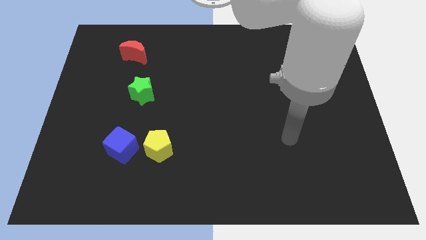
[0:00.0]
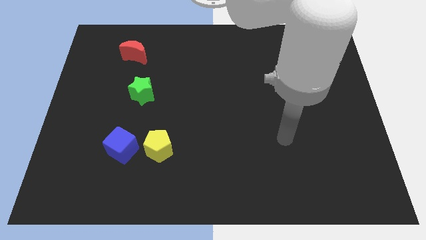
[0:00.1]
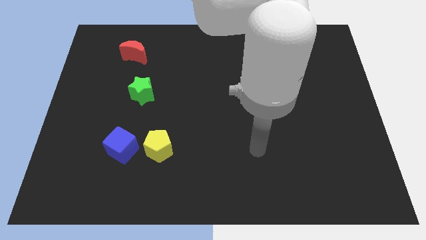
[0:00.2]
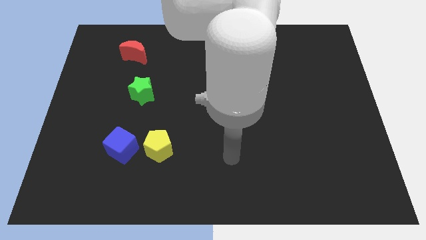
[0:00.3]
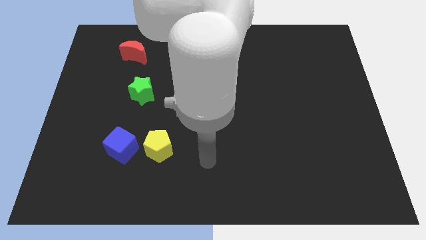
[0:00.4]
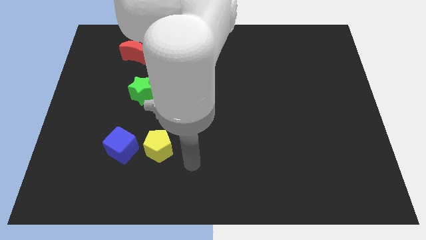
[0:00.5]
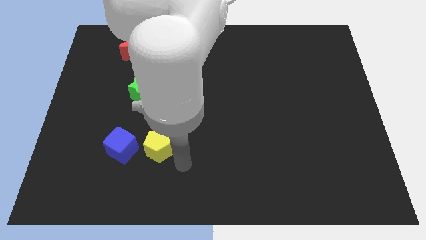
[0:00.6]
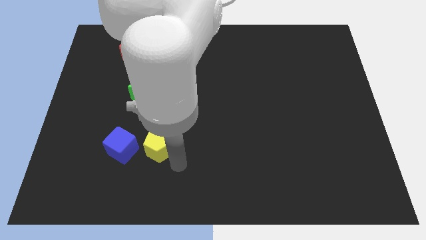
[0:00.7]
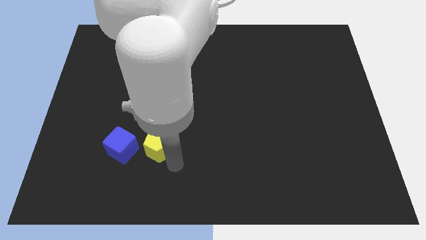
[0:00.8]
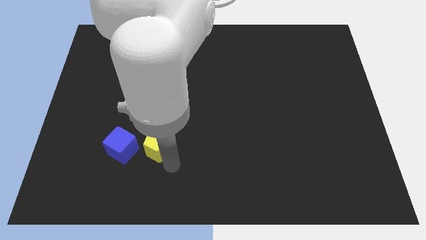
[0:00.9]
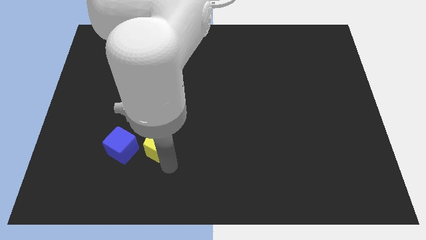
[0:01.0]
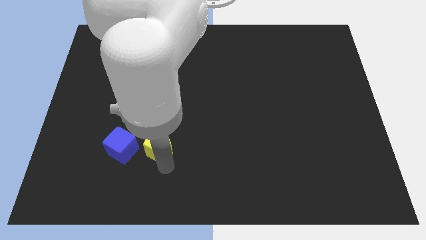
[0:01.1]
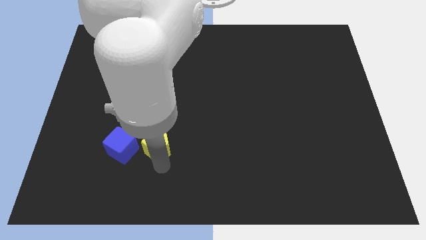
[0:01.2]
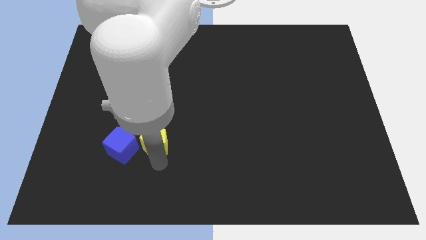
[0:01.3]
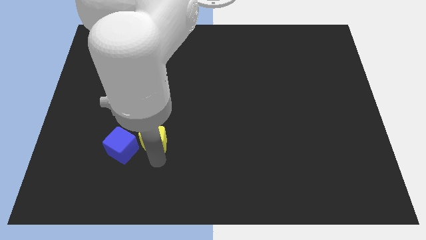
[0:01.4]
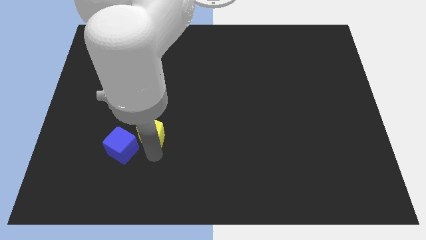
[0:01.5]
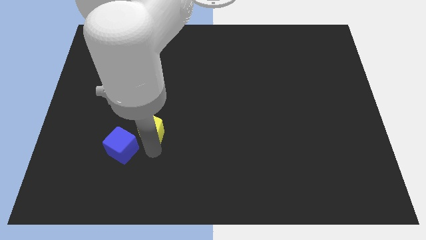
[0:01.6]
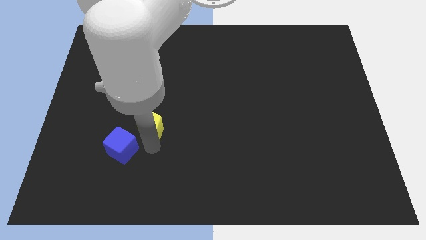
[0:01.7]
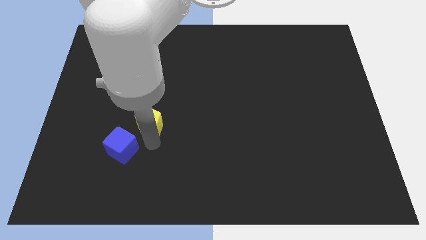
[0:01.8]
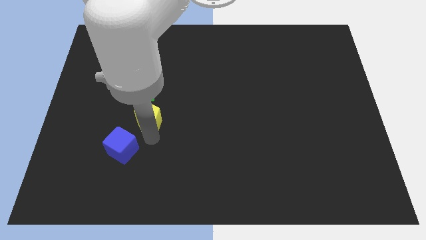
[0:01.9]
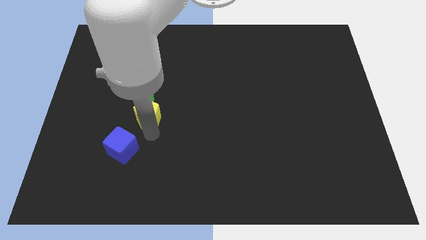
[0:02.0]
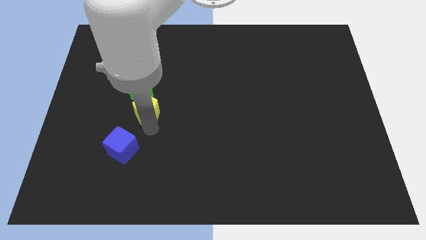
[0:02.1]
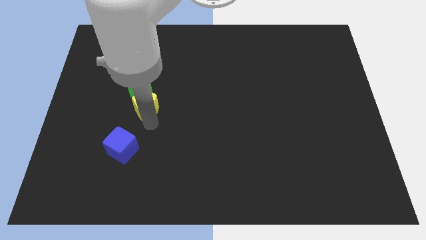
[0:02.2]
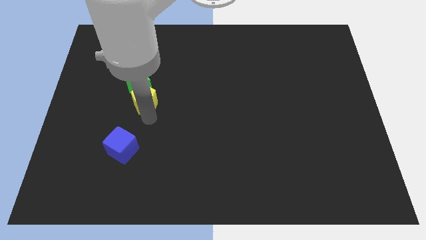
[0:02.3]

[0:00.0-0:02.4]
put the pentagon to the green star

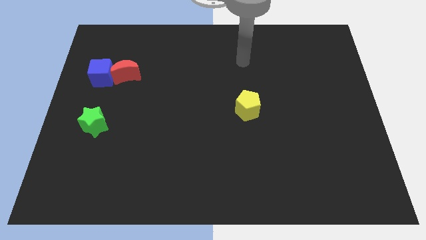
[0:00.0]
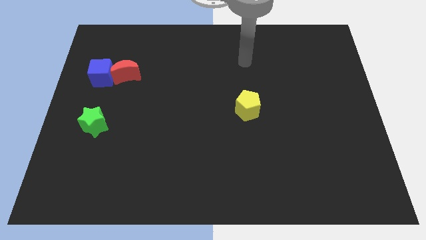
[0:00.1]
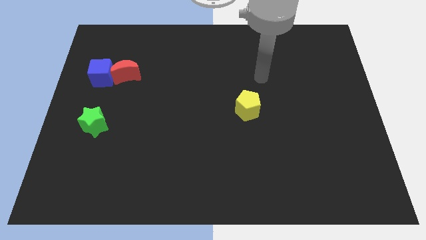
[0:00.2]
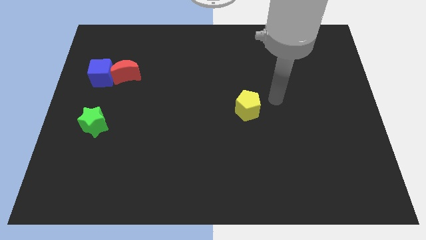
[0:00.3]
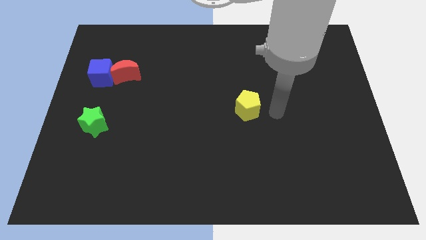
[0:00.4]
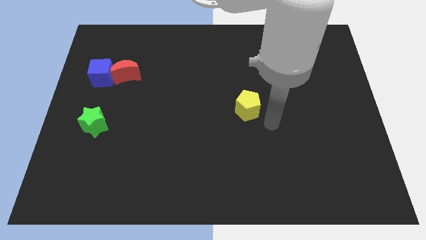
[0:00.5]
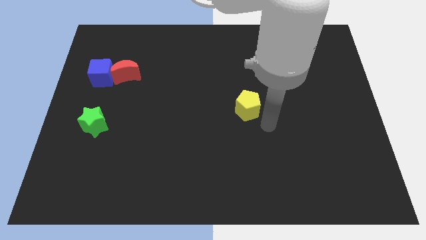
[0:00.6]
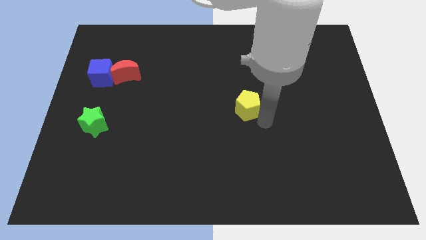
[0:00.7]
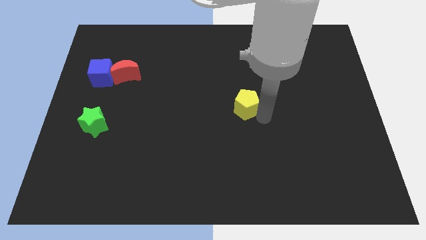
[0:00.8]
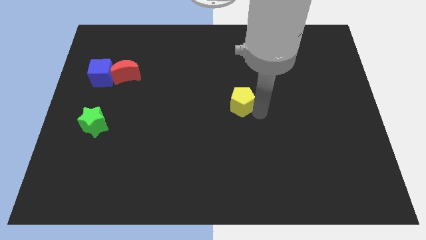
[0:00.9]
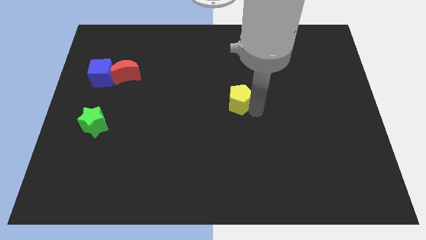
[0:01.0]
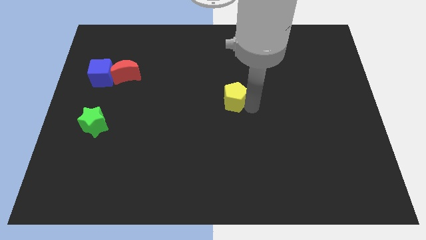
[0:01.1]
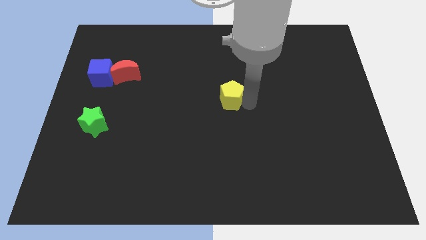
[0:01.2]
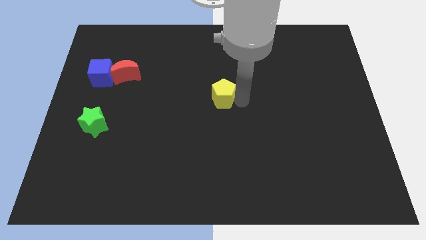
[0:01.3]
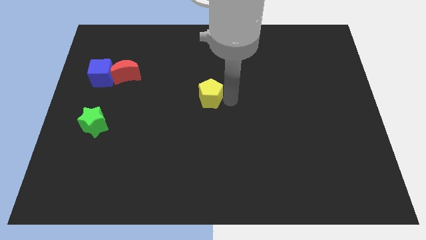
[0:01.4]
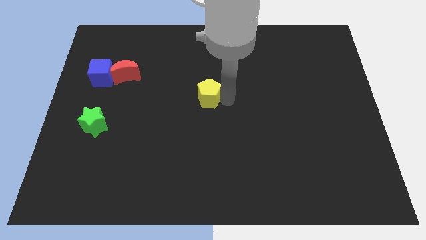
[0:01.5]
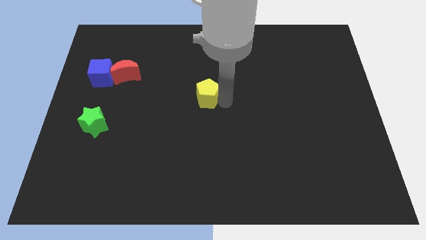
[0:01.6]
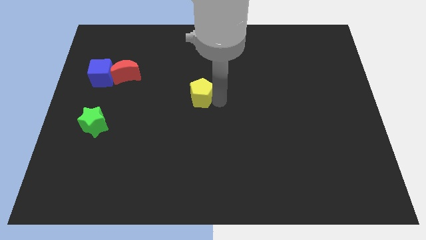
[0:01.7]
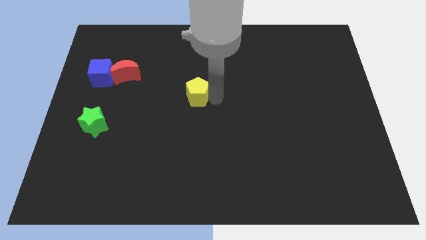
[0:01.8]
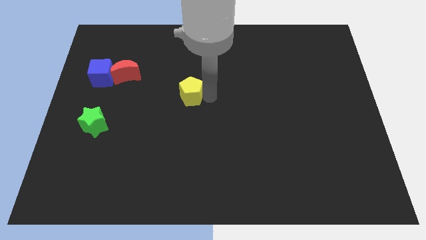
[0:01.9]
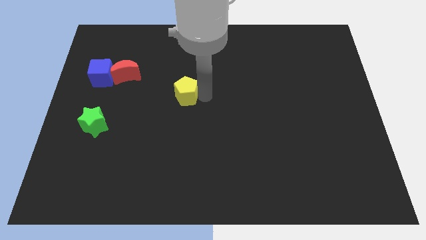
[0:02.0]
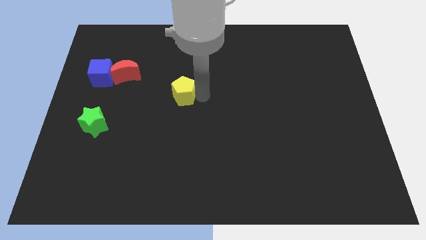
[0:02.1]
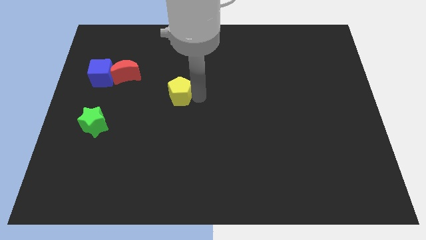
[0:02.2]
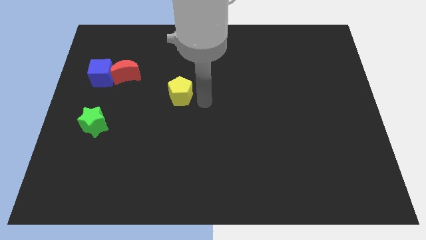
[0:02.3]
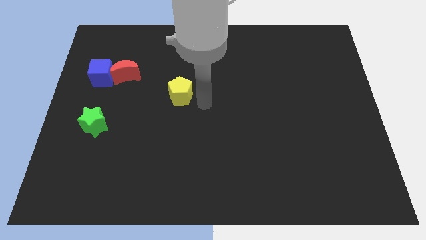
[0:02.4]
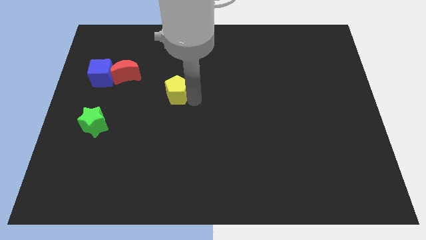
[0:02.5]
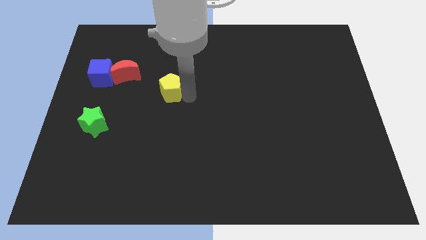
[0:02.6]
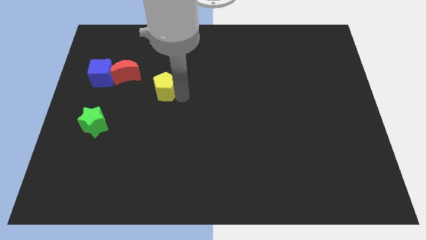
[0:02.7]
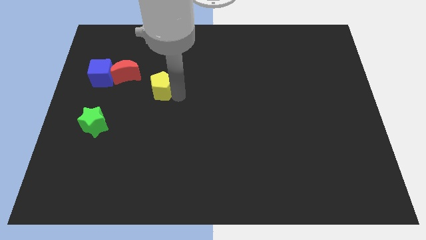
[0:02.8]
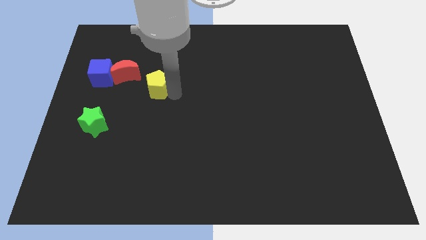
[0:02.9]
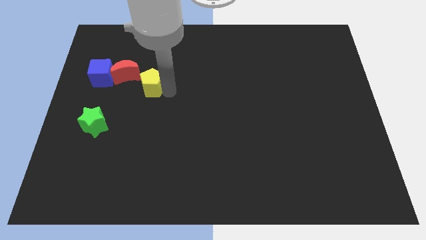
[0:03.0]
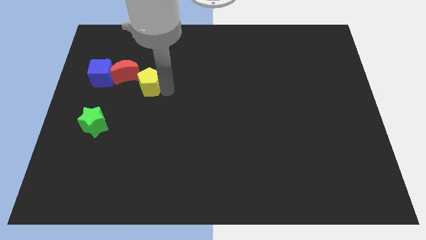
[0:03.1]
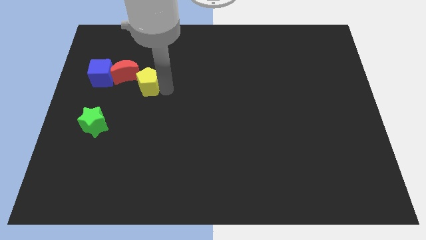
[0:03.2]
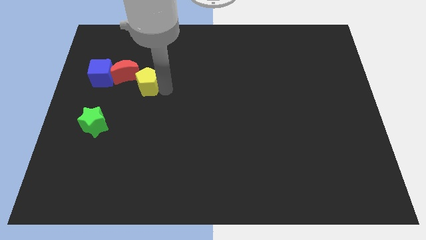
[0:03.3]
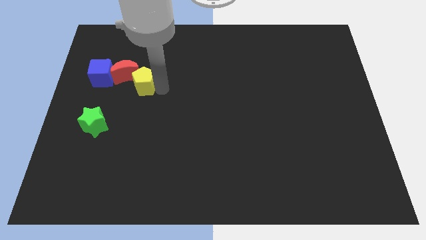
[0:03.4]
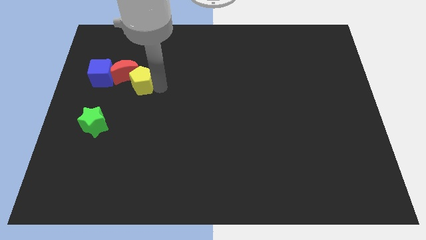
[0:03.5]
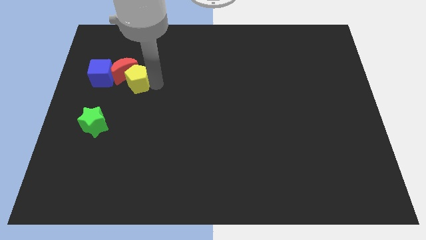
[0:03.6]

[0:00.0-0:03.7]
put the yellow pentagon next to the moon

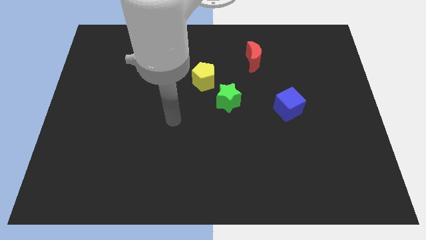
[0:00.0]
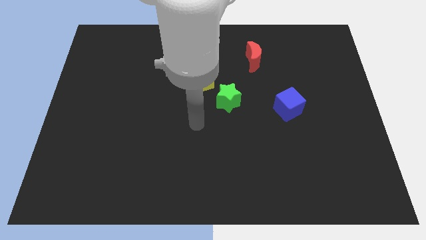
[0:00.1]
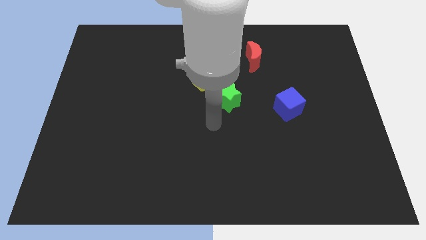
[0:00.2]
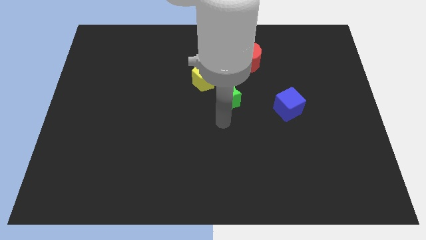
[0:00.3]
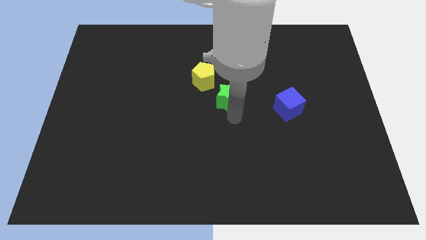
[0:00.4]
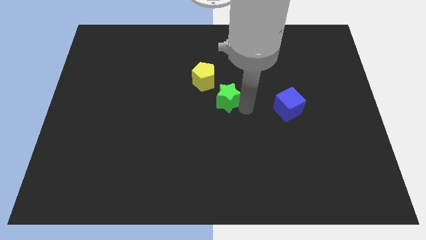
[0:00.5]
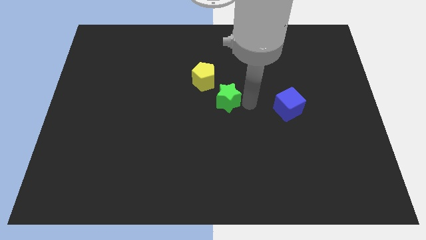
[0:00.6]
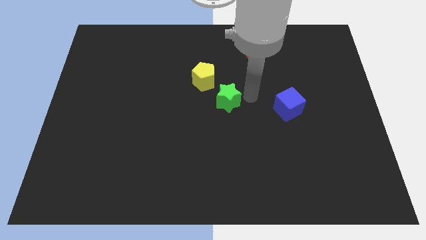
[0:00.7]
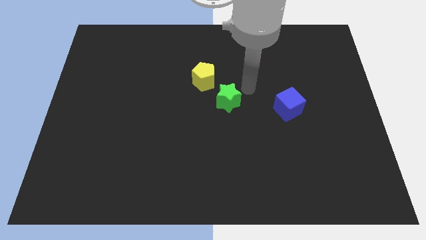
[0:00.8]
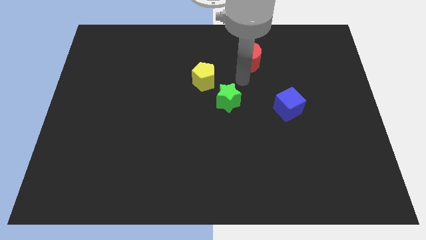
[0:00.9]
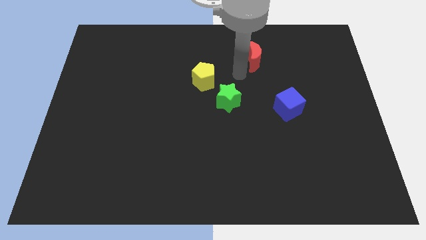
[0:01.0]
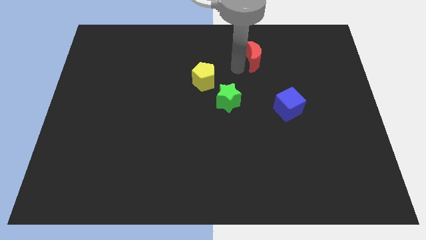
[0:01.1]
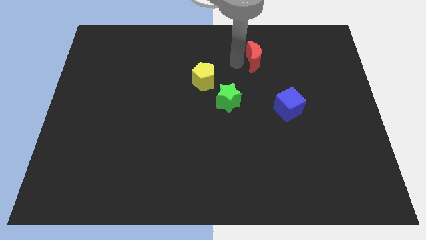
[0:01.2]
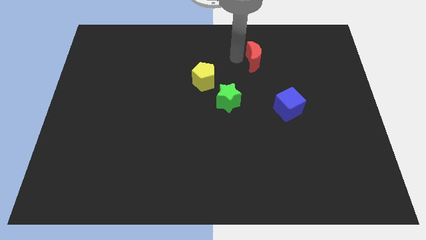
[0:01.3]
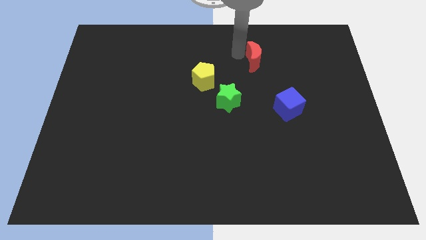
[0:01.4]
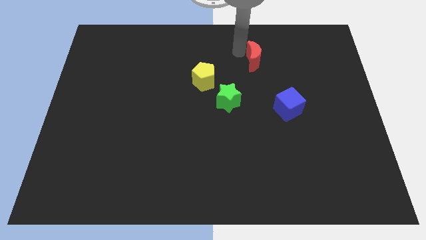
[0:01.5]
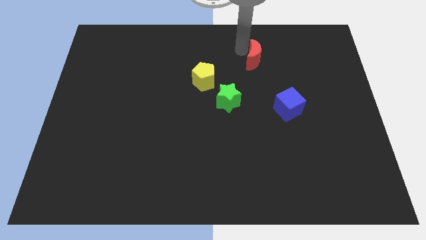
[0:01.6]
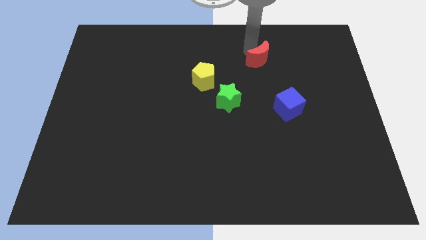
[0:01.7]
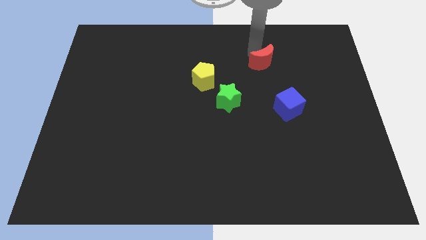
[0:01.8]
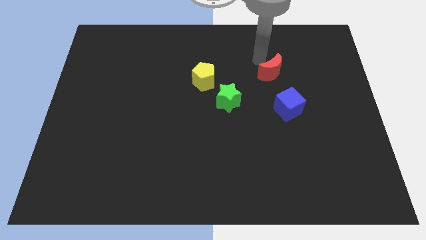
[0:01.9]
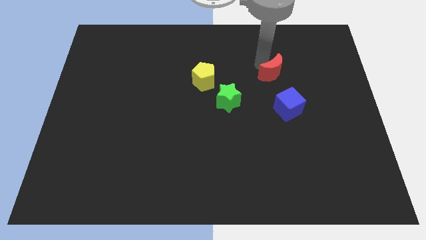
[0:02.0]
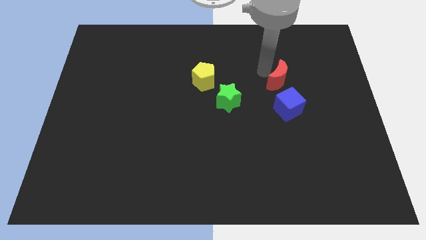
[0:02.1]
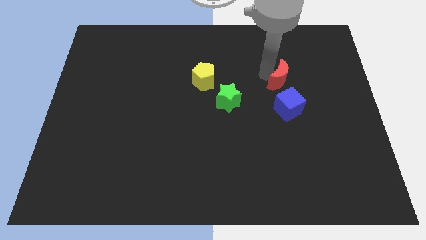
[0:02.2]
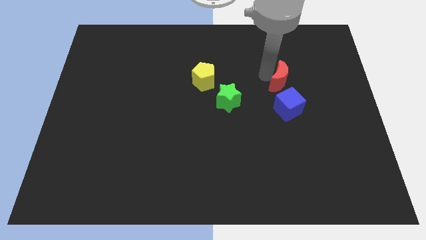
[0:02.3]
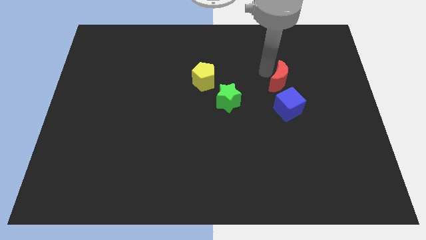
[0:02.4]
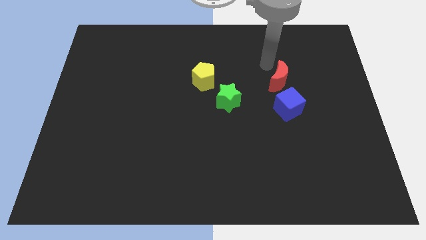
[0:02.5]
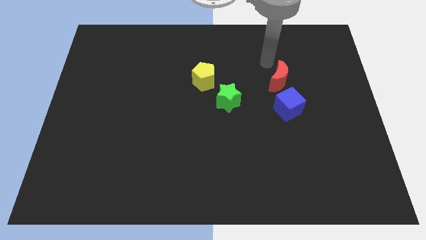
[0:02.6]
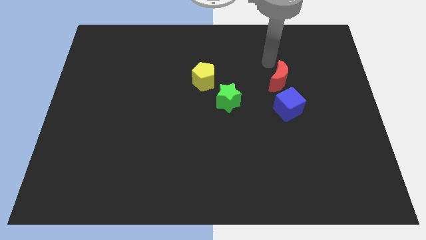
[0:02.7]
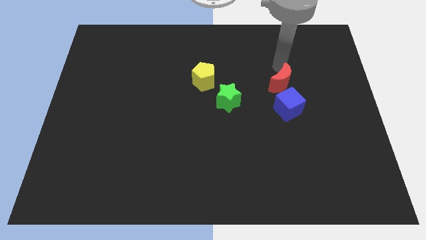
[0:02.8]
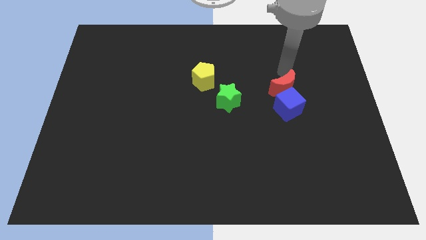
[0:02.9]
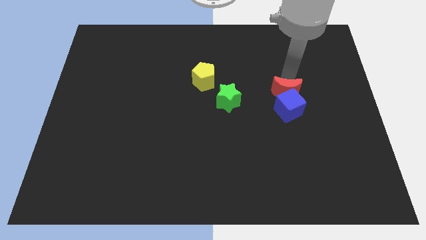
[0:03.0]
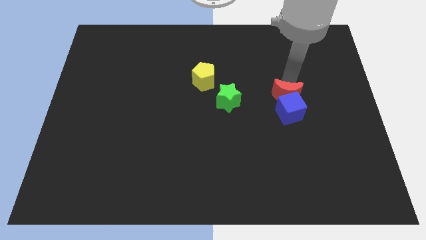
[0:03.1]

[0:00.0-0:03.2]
move the red block next to the cube
